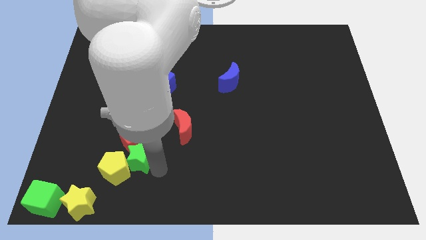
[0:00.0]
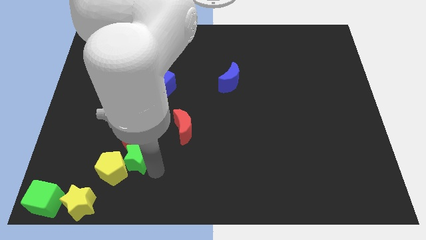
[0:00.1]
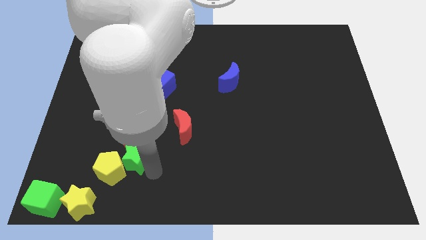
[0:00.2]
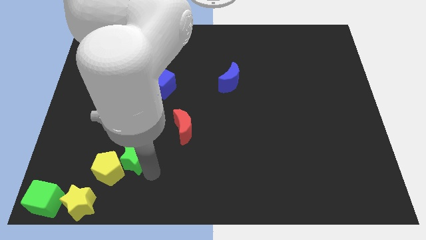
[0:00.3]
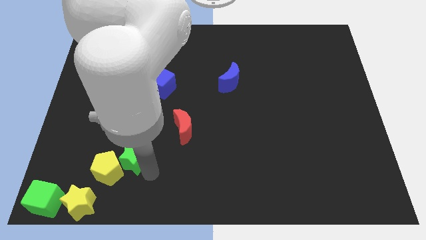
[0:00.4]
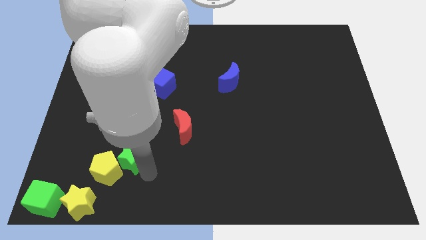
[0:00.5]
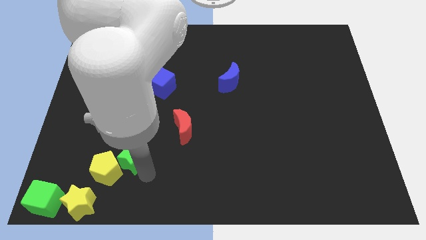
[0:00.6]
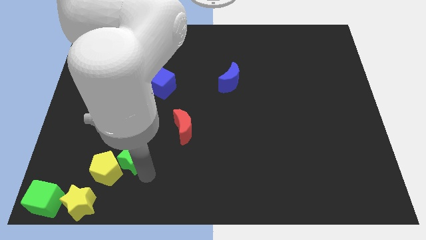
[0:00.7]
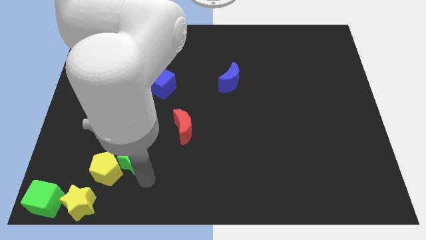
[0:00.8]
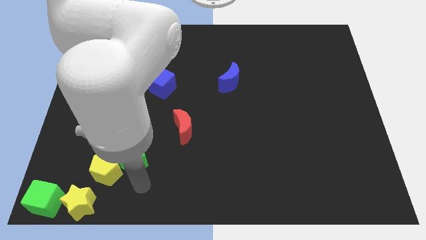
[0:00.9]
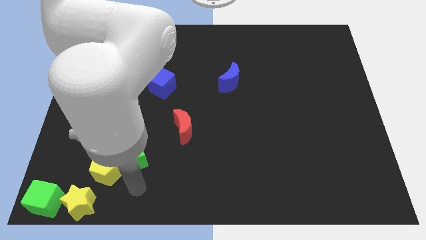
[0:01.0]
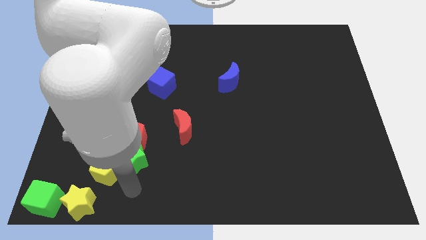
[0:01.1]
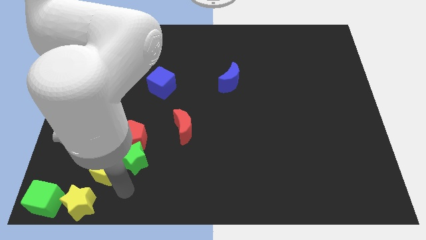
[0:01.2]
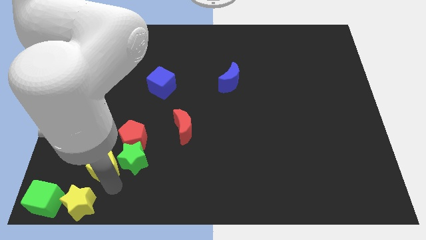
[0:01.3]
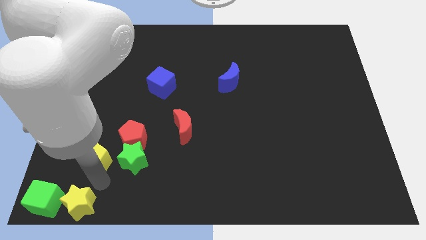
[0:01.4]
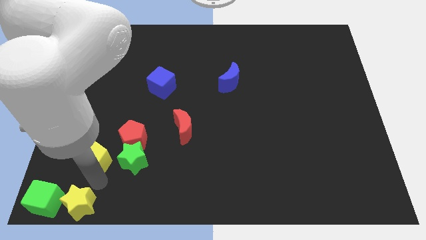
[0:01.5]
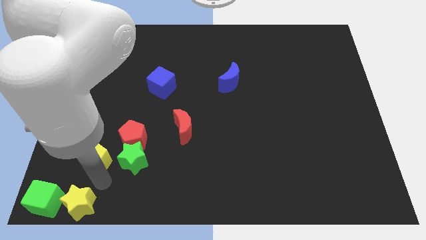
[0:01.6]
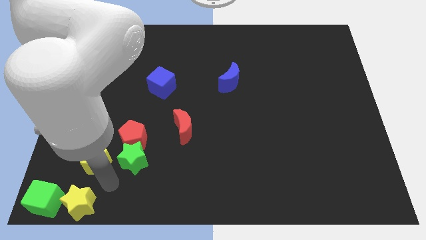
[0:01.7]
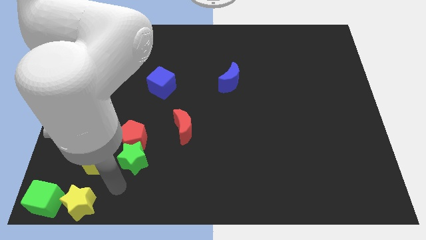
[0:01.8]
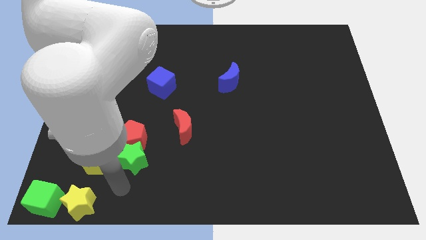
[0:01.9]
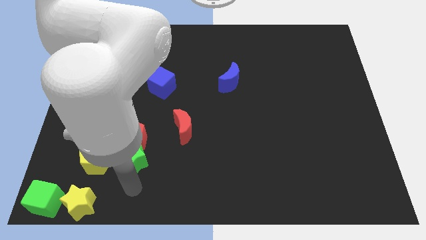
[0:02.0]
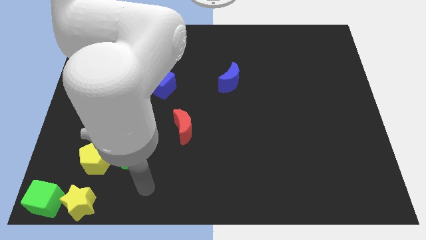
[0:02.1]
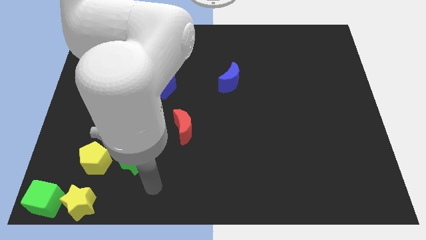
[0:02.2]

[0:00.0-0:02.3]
push the yellow pentagon to the left of green star

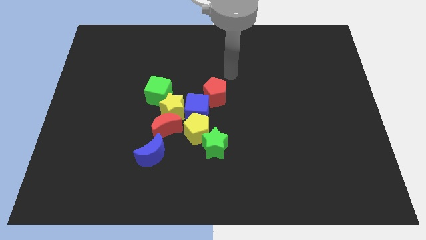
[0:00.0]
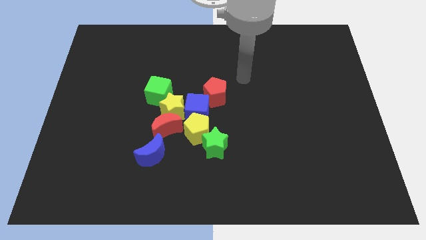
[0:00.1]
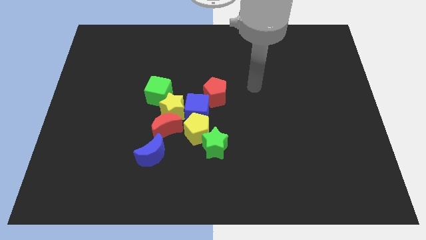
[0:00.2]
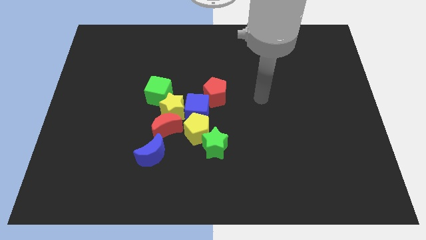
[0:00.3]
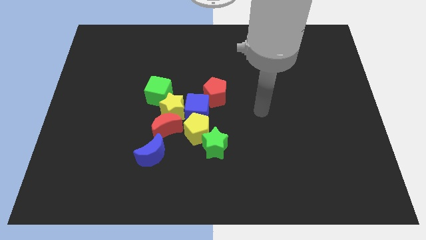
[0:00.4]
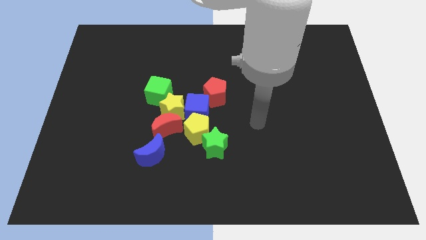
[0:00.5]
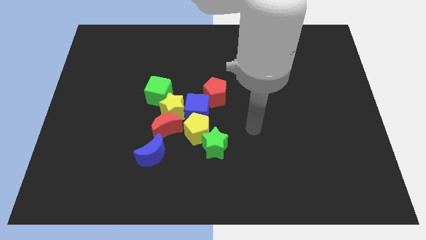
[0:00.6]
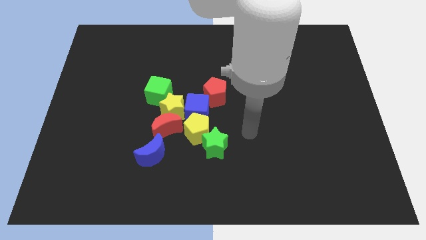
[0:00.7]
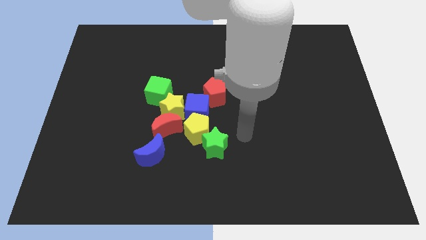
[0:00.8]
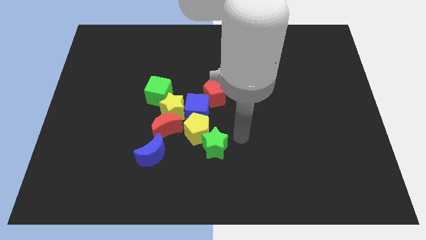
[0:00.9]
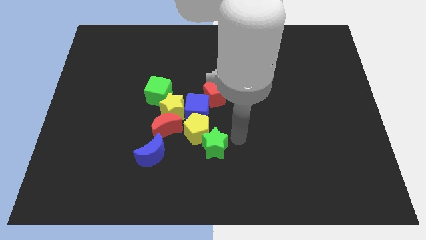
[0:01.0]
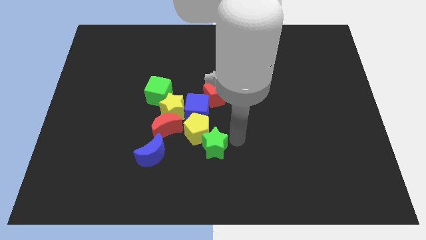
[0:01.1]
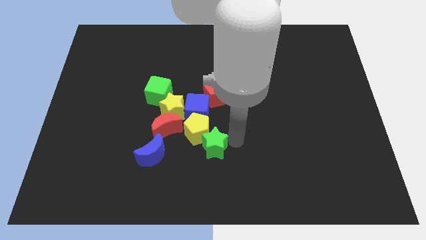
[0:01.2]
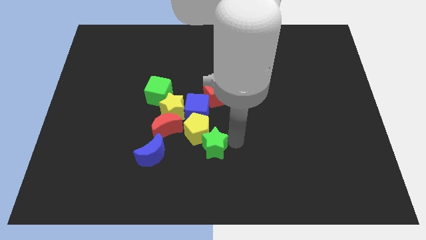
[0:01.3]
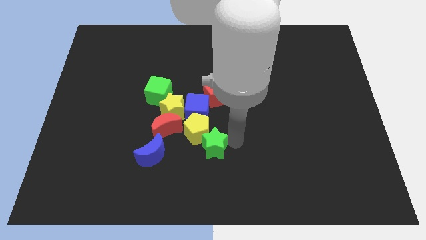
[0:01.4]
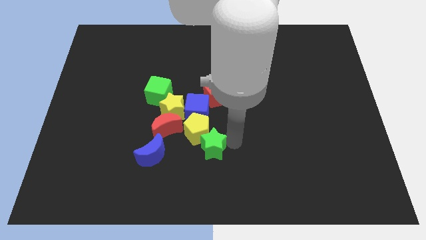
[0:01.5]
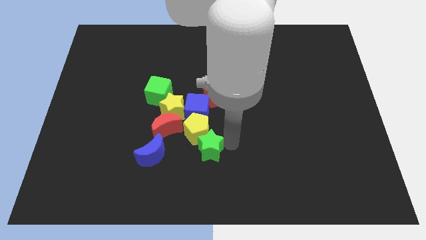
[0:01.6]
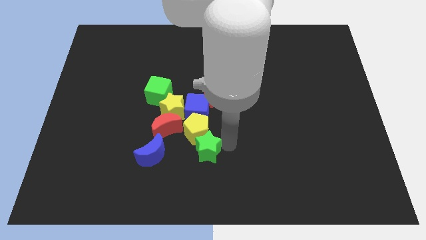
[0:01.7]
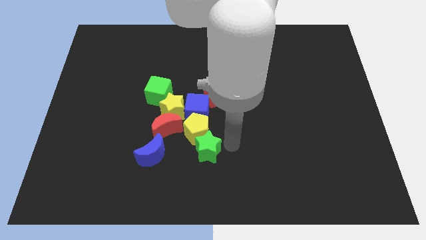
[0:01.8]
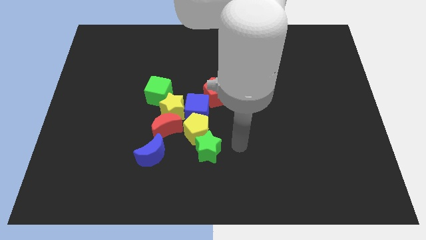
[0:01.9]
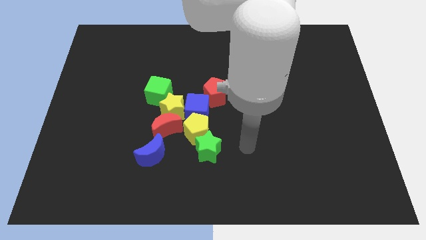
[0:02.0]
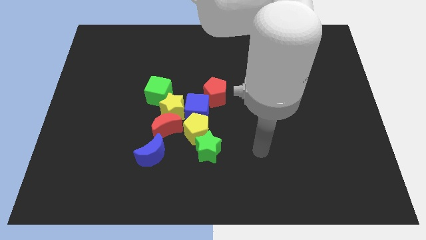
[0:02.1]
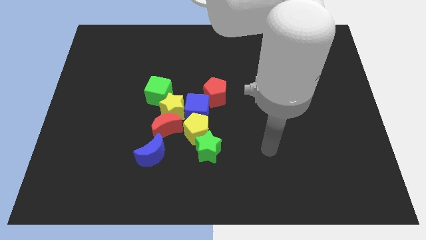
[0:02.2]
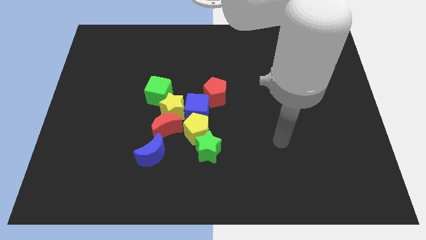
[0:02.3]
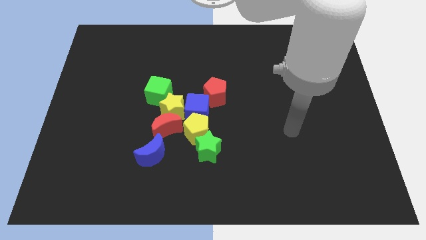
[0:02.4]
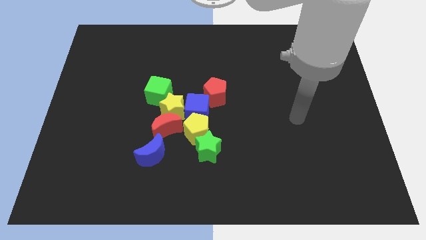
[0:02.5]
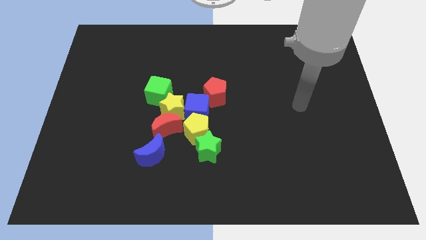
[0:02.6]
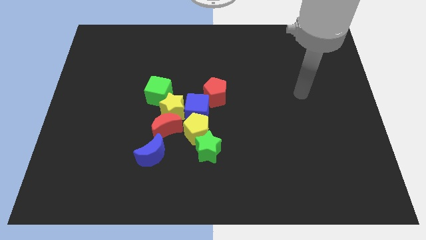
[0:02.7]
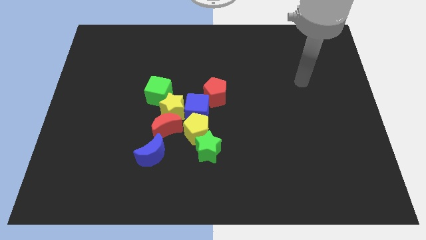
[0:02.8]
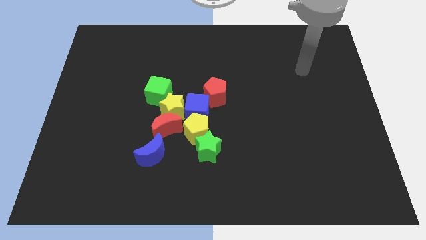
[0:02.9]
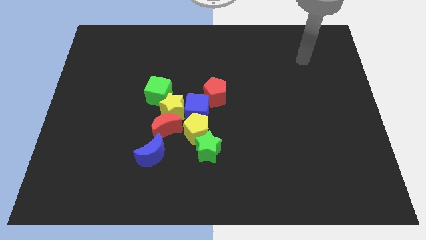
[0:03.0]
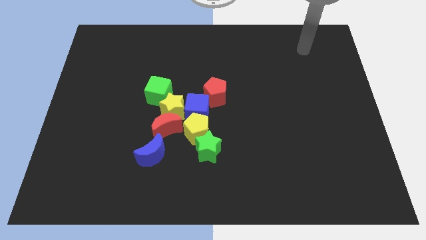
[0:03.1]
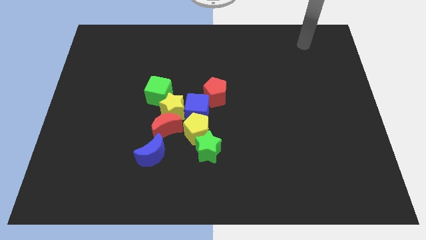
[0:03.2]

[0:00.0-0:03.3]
touch the top right of the green star

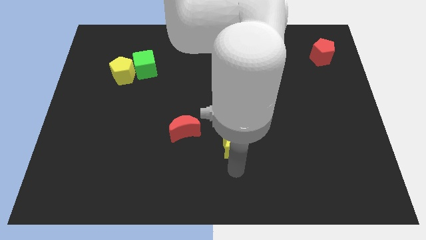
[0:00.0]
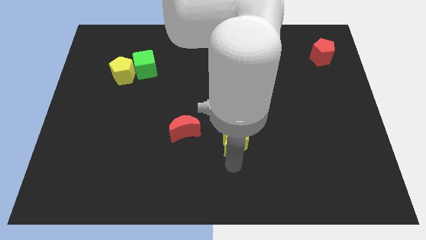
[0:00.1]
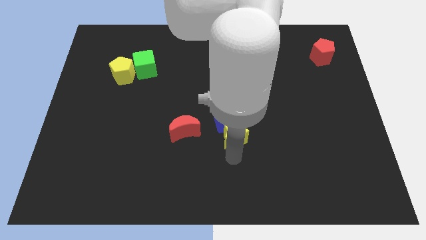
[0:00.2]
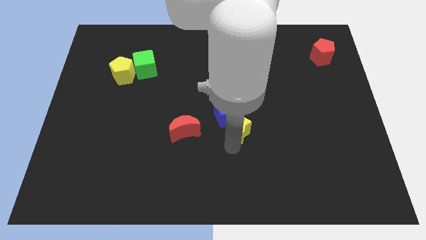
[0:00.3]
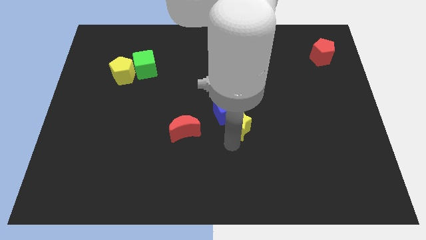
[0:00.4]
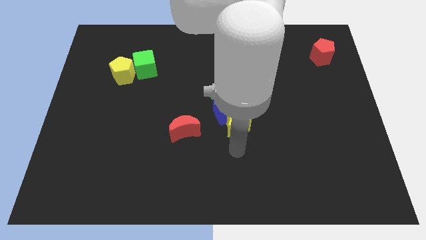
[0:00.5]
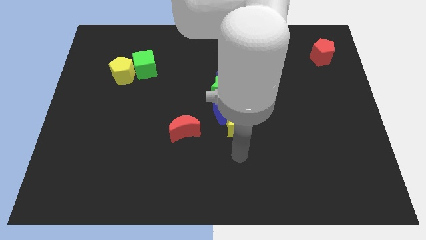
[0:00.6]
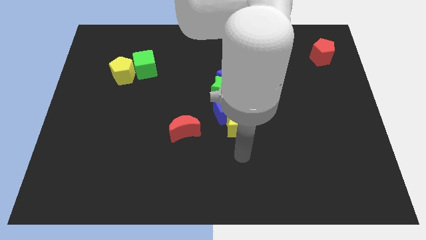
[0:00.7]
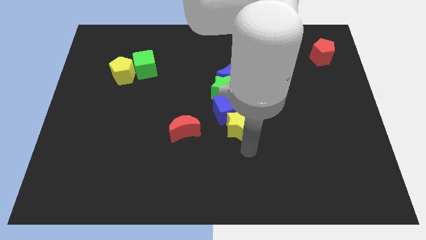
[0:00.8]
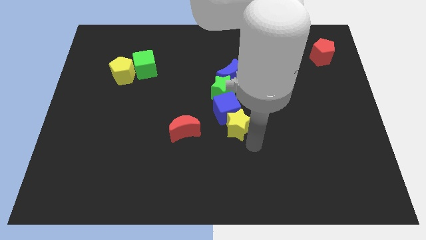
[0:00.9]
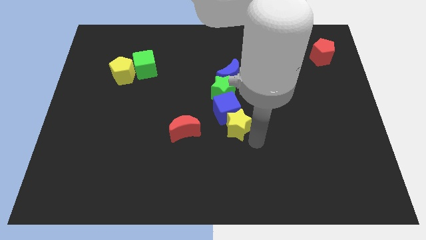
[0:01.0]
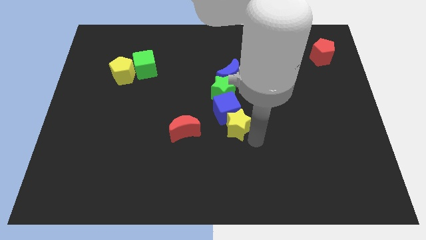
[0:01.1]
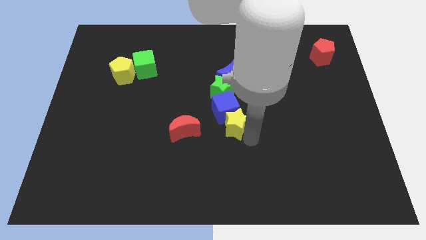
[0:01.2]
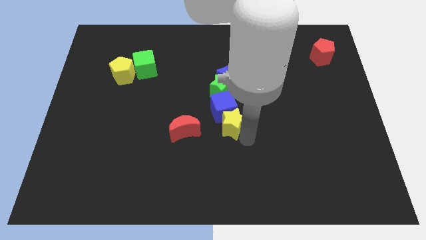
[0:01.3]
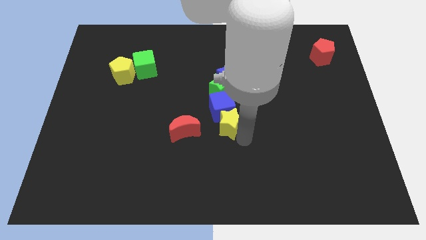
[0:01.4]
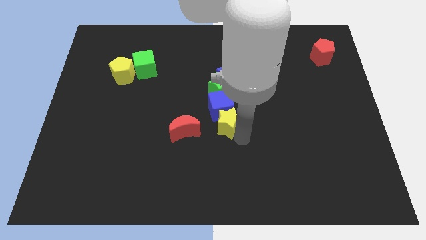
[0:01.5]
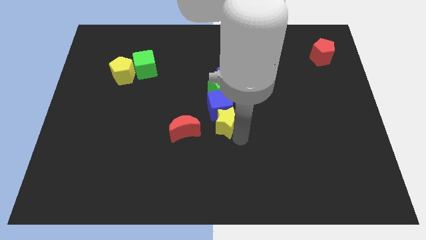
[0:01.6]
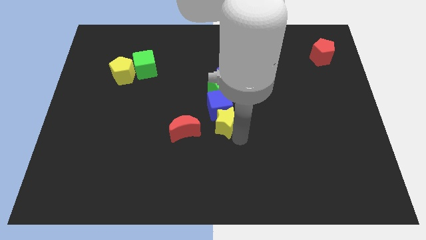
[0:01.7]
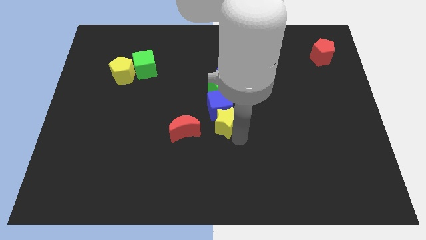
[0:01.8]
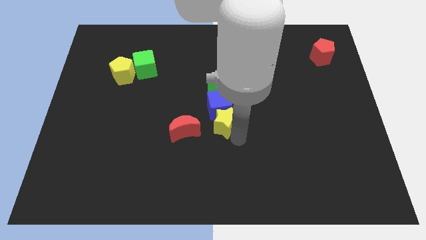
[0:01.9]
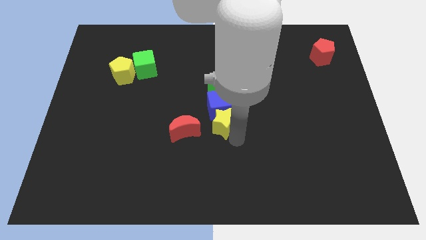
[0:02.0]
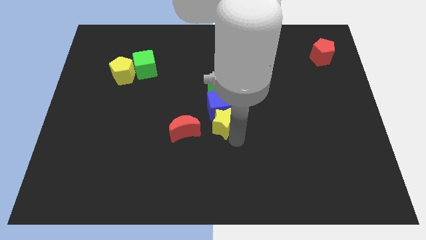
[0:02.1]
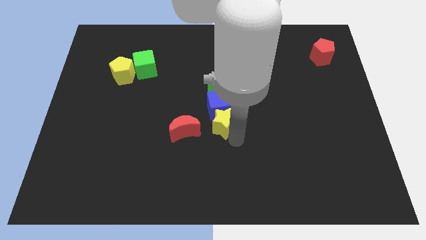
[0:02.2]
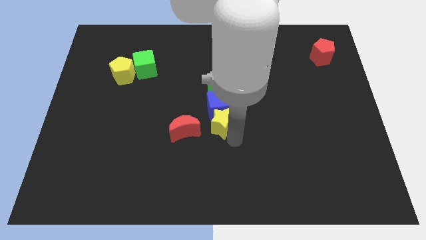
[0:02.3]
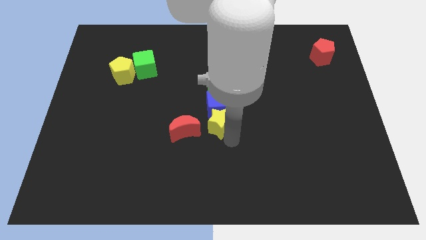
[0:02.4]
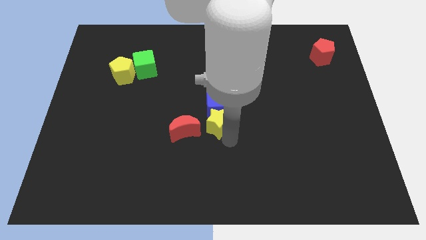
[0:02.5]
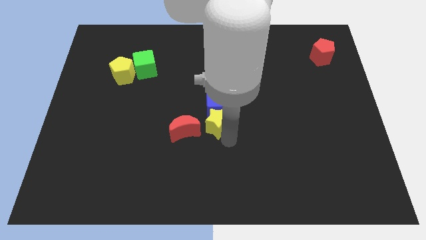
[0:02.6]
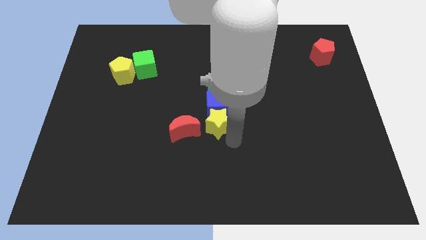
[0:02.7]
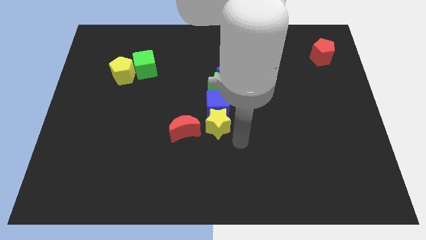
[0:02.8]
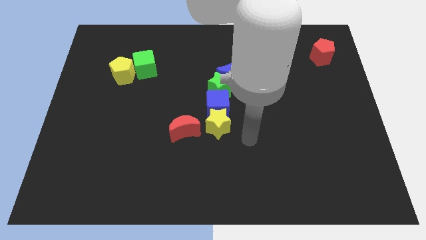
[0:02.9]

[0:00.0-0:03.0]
move the yellow star to the right of red crescent

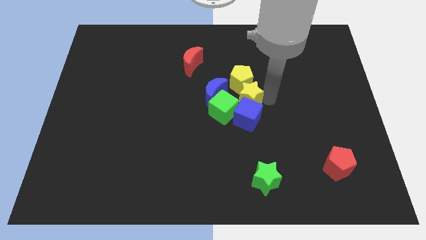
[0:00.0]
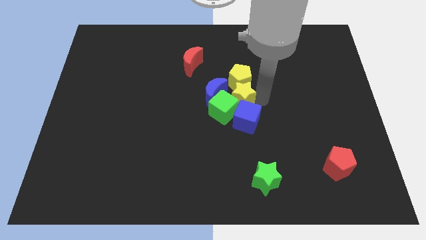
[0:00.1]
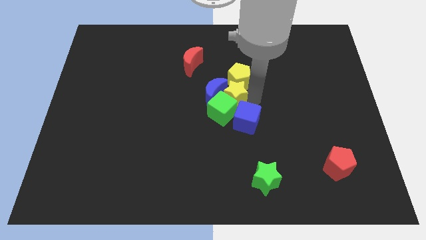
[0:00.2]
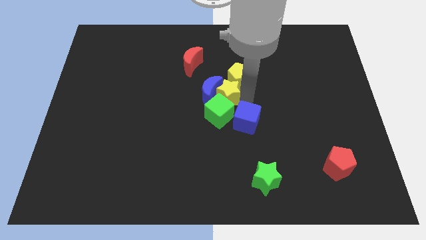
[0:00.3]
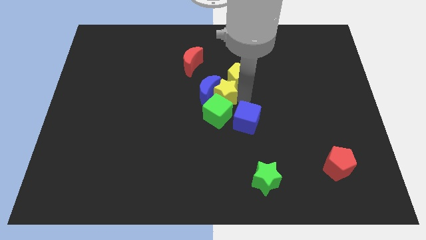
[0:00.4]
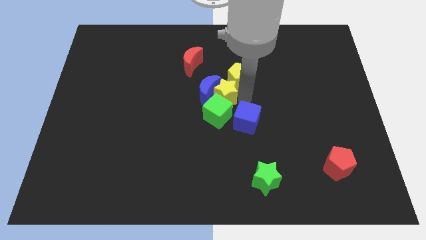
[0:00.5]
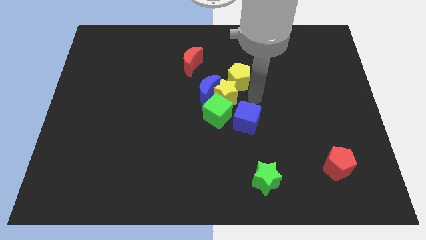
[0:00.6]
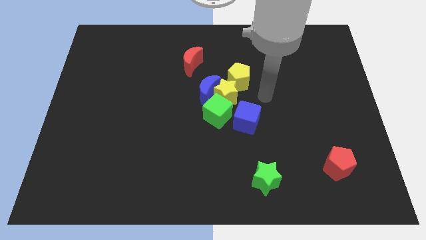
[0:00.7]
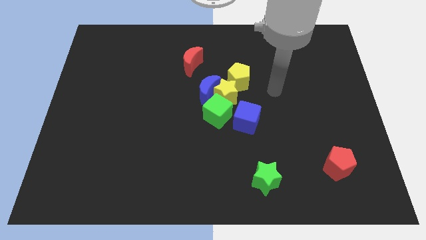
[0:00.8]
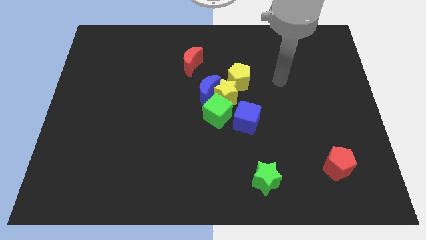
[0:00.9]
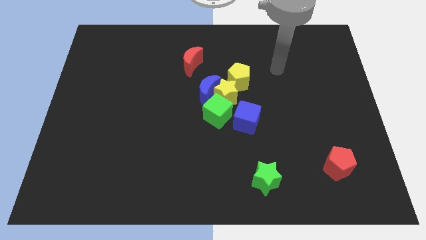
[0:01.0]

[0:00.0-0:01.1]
move the yellow star to the right of the blue crescent
